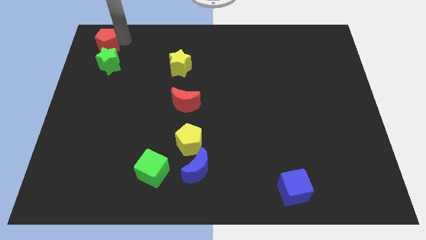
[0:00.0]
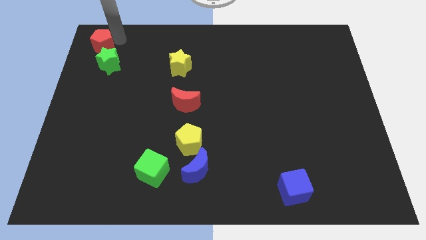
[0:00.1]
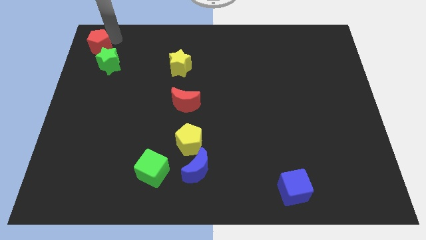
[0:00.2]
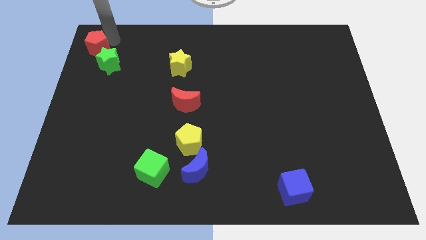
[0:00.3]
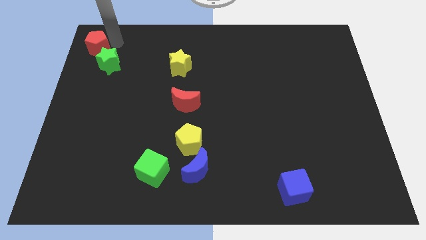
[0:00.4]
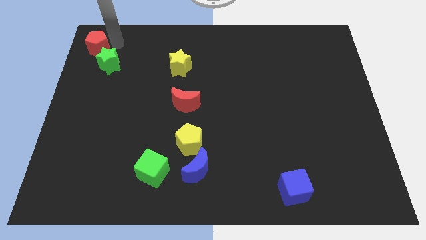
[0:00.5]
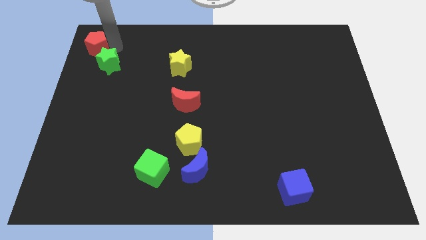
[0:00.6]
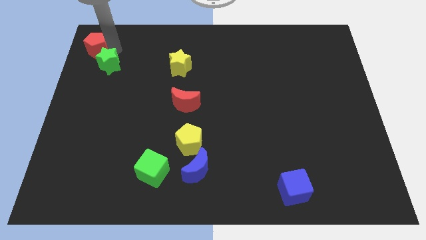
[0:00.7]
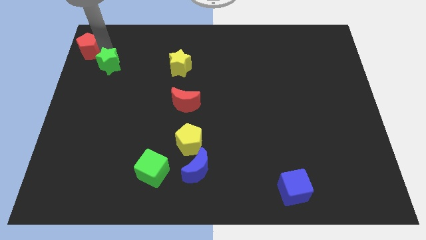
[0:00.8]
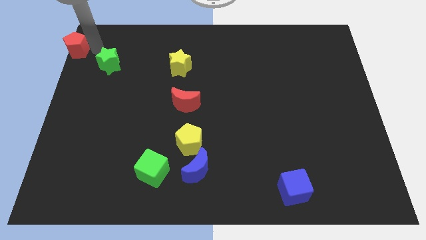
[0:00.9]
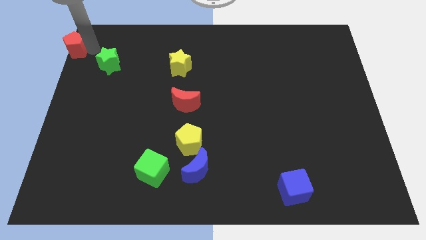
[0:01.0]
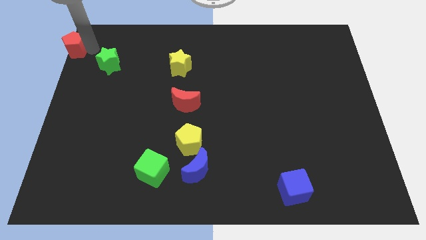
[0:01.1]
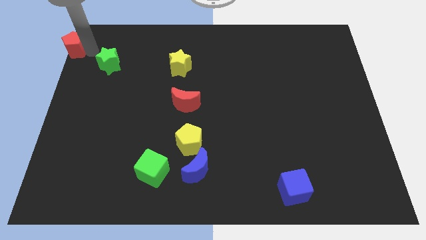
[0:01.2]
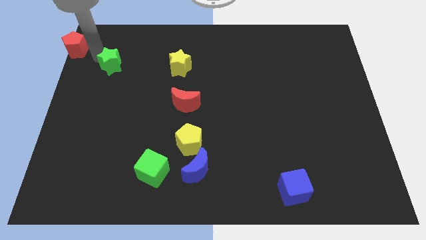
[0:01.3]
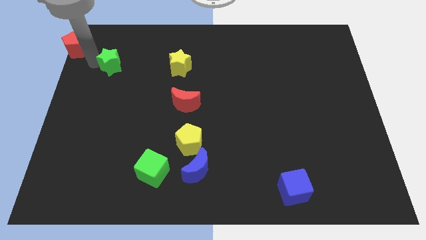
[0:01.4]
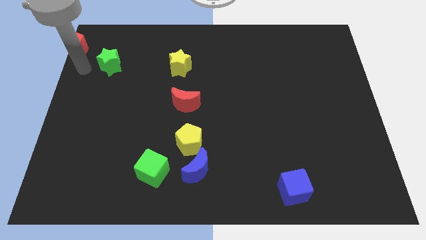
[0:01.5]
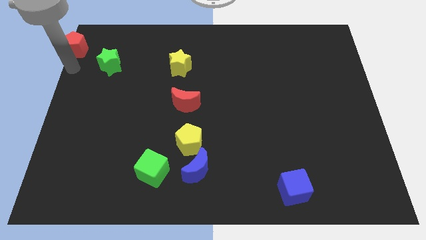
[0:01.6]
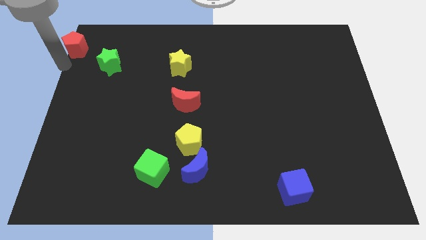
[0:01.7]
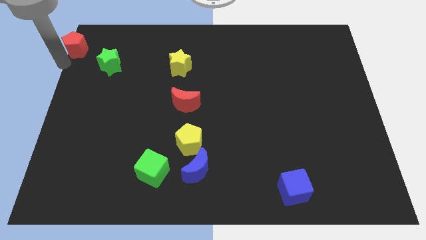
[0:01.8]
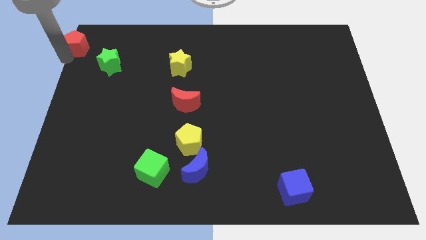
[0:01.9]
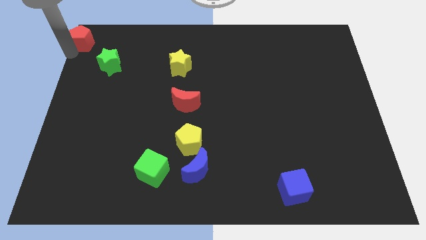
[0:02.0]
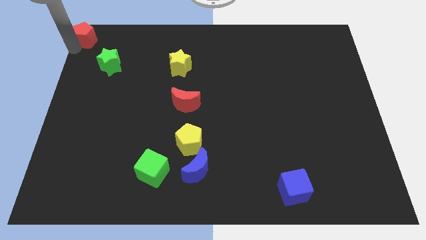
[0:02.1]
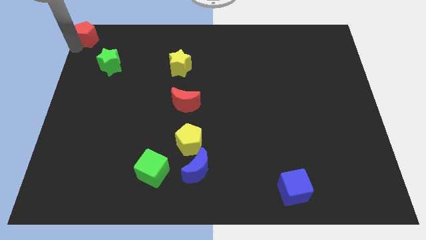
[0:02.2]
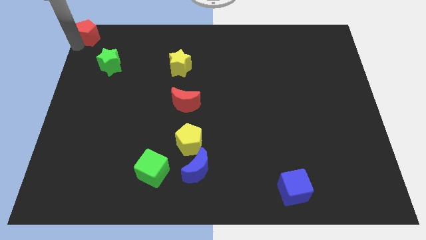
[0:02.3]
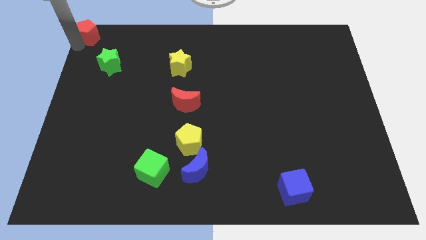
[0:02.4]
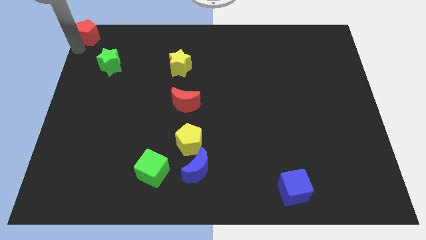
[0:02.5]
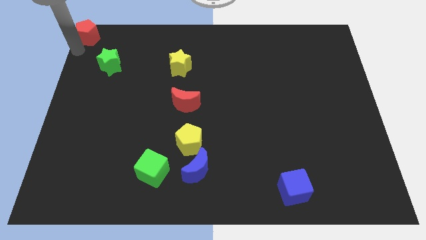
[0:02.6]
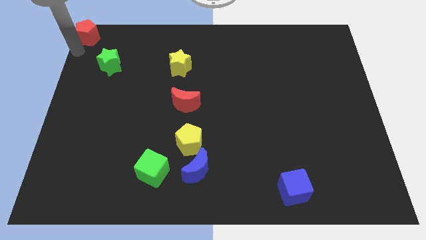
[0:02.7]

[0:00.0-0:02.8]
move red pentagon to top left corner

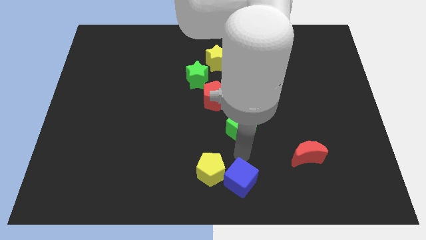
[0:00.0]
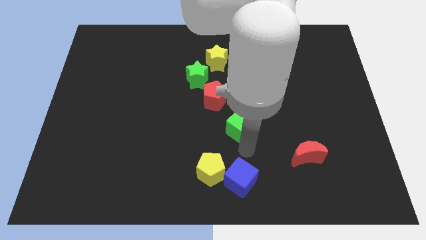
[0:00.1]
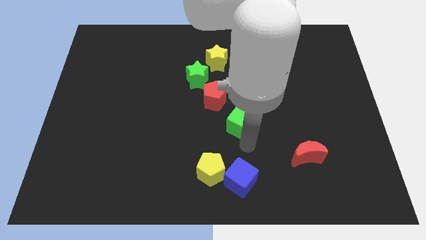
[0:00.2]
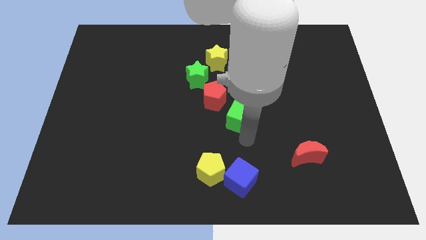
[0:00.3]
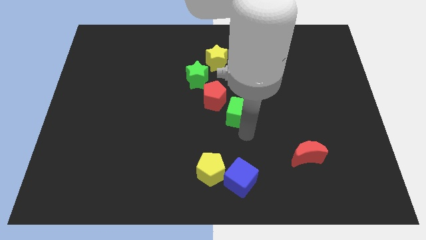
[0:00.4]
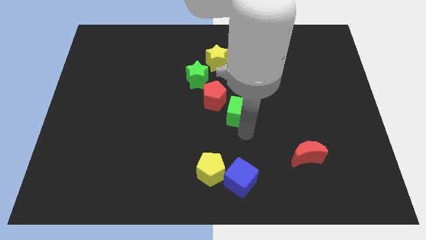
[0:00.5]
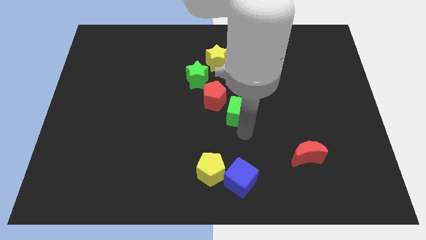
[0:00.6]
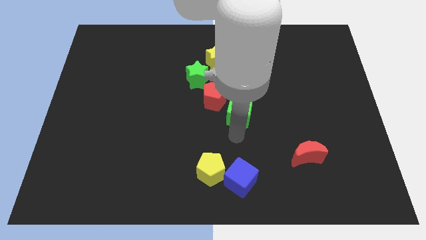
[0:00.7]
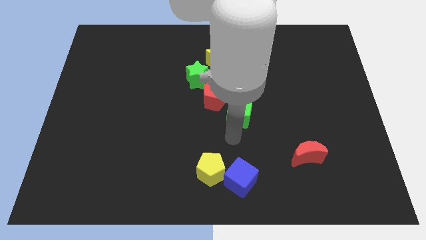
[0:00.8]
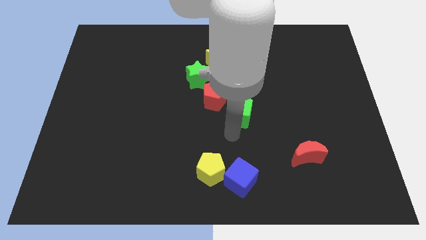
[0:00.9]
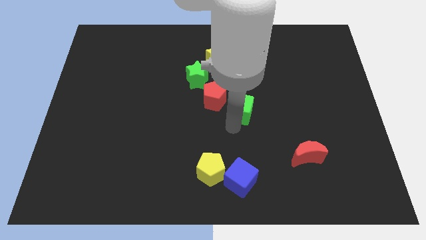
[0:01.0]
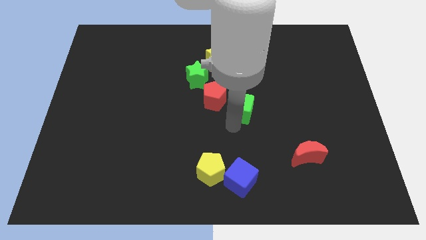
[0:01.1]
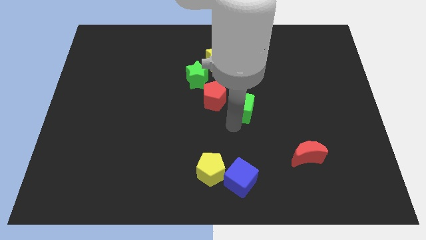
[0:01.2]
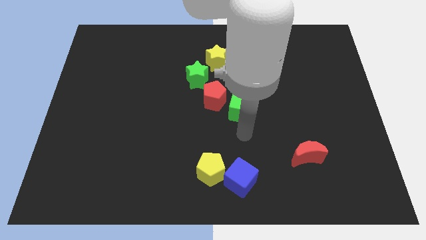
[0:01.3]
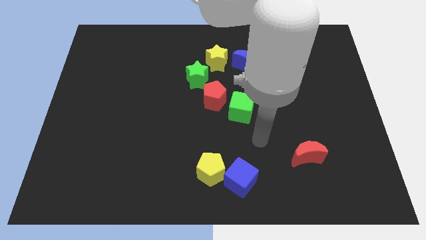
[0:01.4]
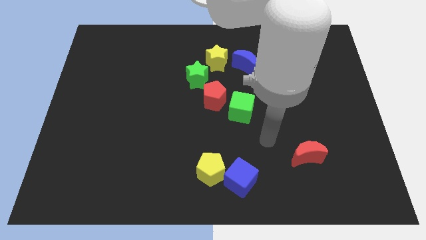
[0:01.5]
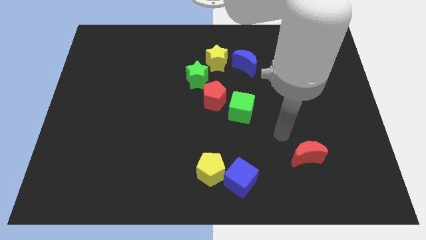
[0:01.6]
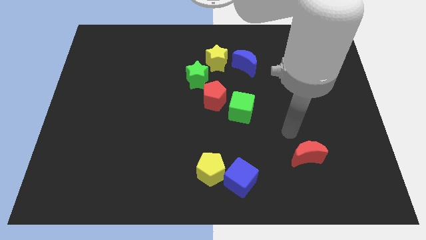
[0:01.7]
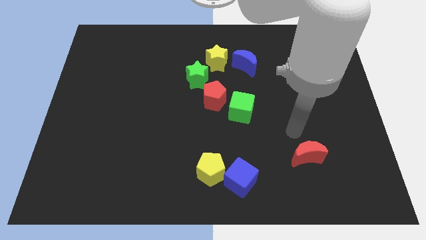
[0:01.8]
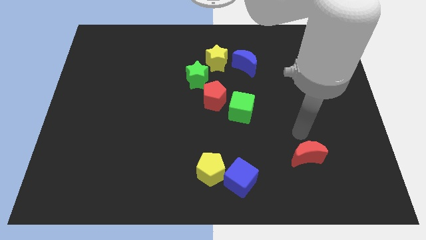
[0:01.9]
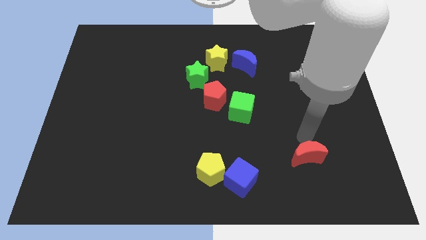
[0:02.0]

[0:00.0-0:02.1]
move green cube slightly up

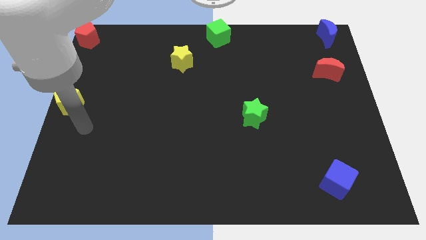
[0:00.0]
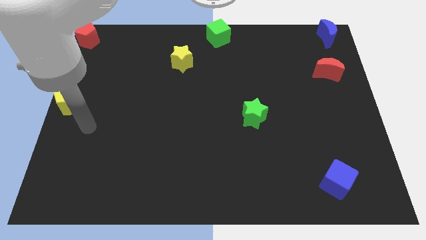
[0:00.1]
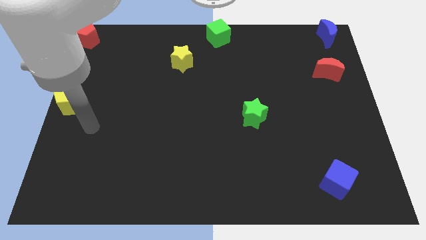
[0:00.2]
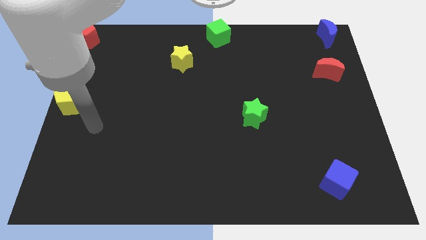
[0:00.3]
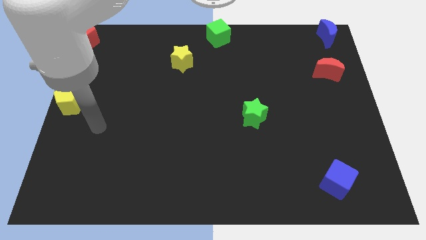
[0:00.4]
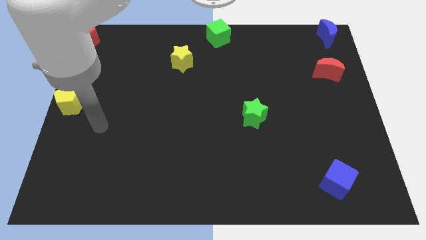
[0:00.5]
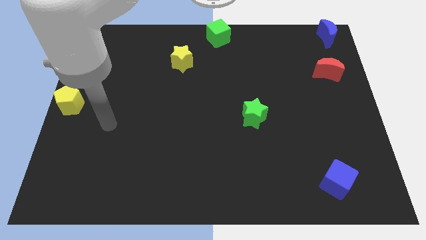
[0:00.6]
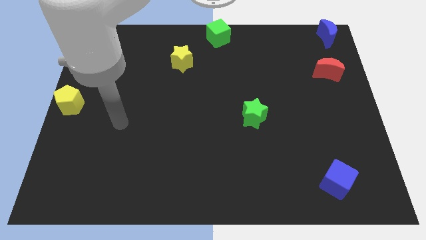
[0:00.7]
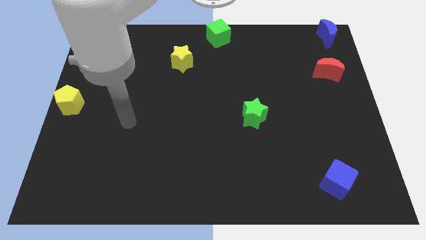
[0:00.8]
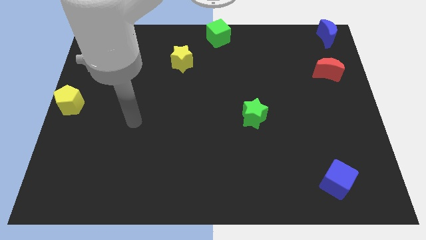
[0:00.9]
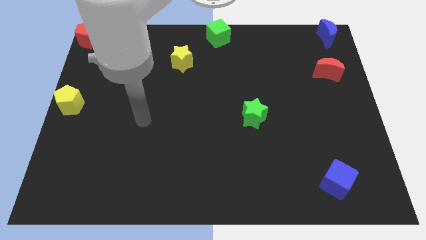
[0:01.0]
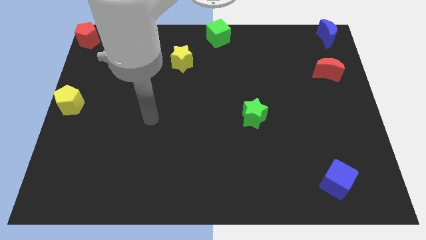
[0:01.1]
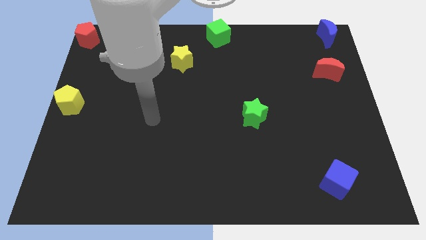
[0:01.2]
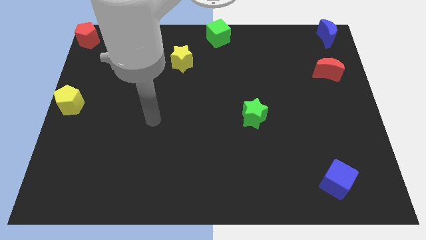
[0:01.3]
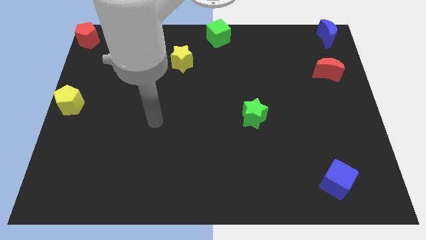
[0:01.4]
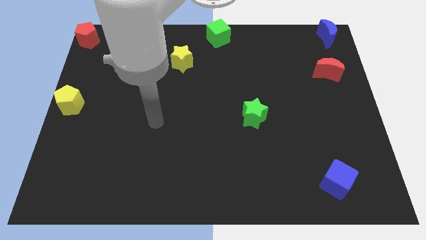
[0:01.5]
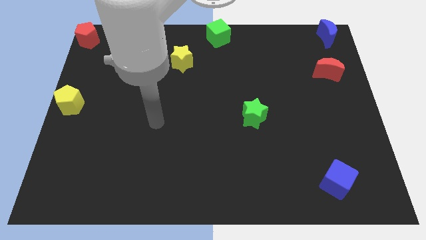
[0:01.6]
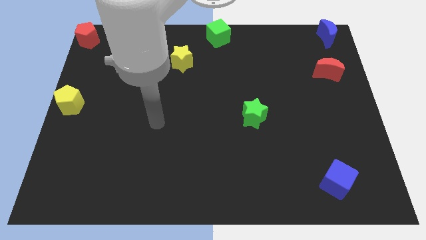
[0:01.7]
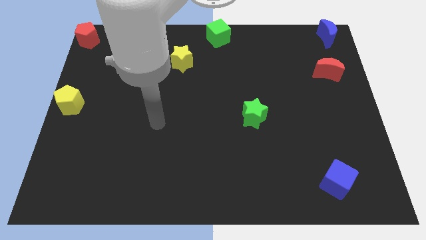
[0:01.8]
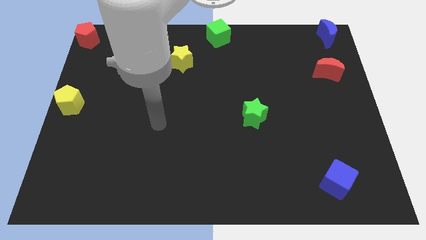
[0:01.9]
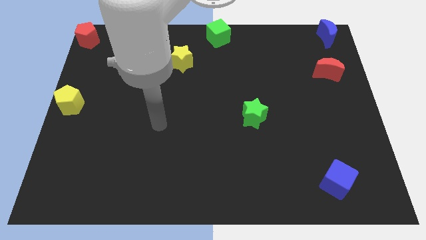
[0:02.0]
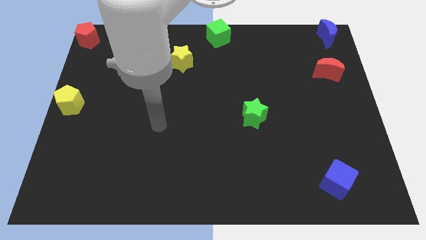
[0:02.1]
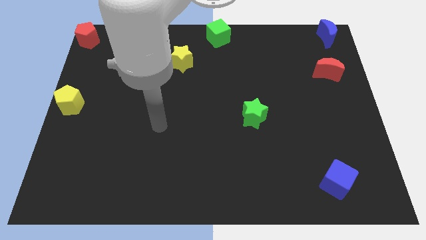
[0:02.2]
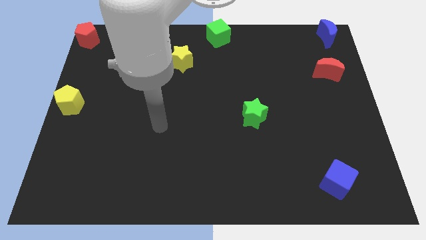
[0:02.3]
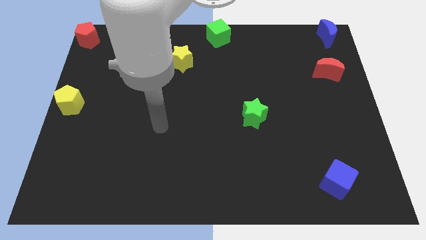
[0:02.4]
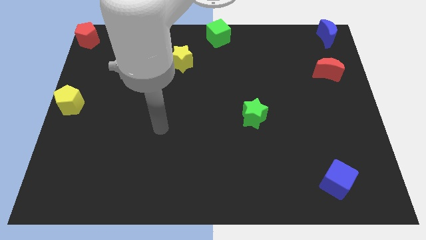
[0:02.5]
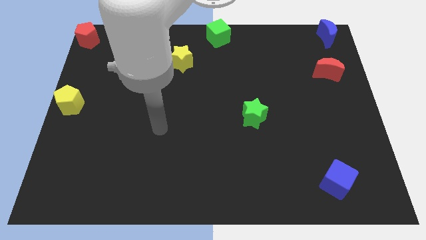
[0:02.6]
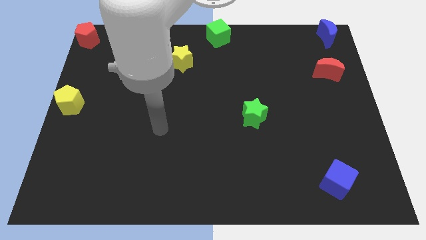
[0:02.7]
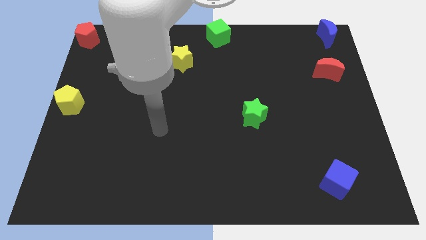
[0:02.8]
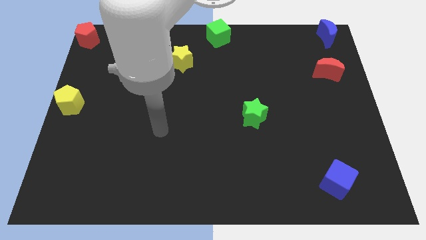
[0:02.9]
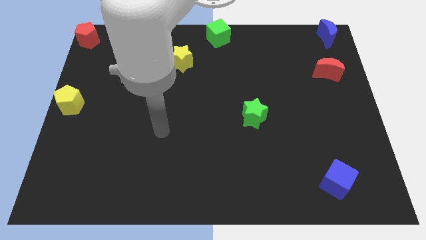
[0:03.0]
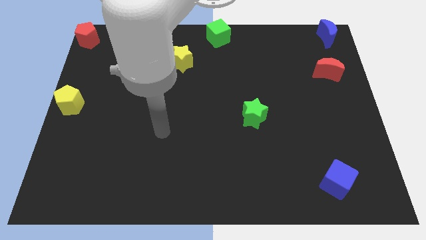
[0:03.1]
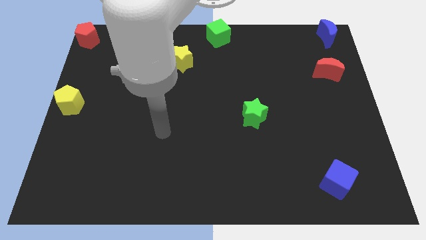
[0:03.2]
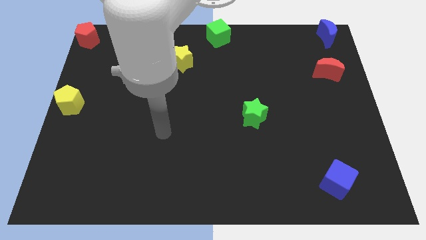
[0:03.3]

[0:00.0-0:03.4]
move yourself away from the yellow pentagon

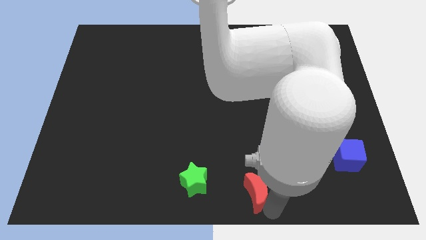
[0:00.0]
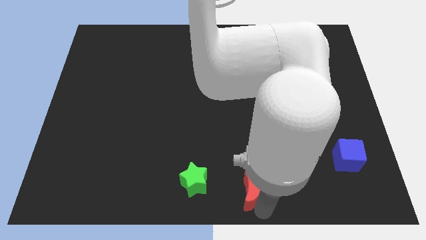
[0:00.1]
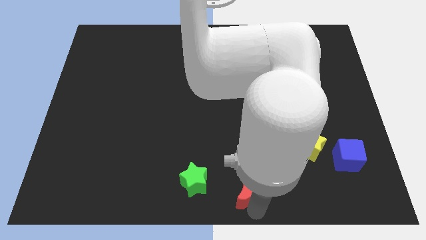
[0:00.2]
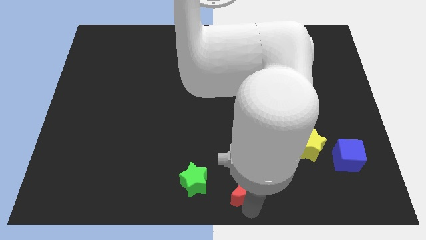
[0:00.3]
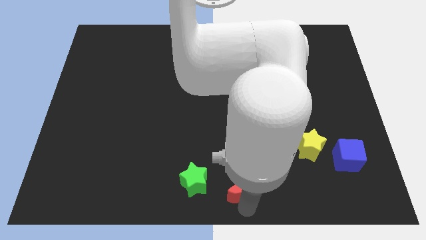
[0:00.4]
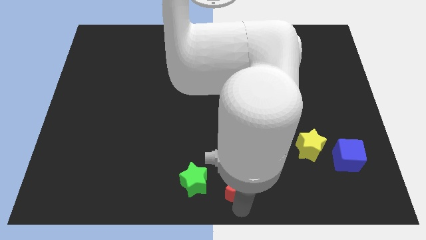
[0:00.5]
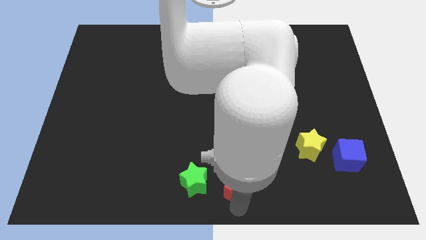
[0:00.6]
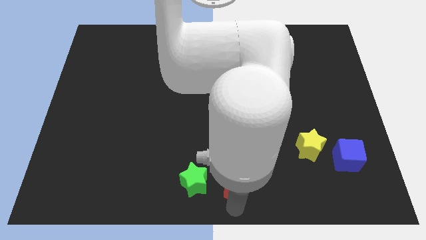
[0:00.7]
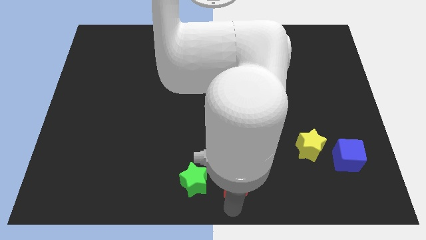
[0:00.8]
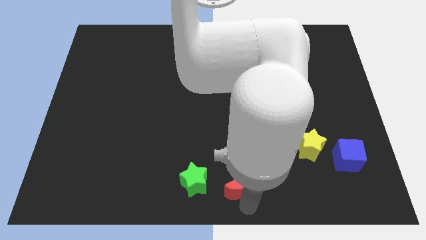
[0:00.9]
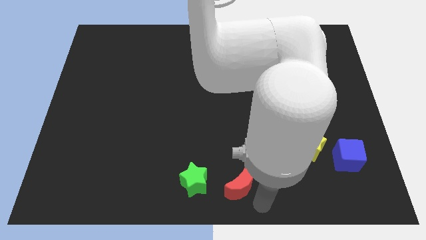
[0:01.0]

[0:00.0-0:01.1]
adjust the red moon to the right side of the green star
